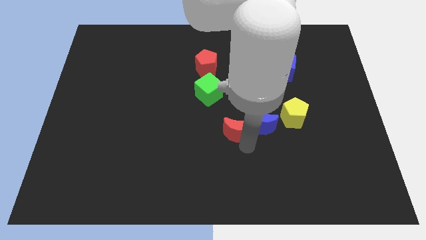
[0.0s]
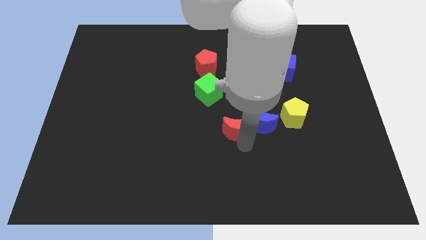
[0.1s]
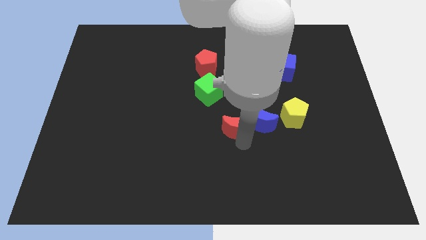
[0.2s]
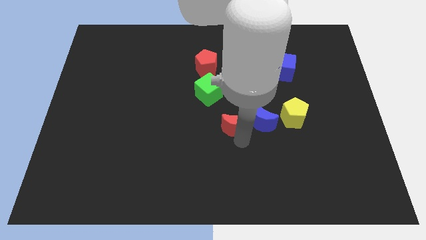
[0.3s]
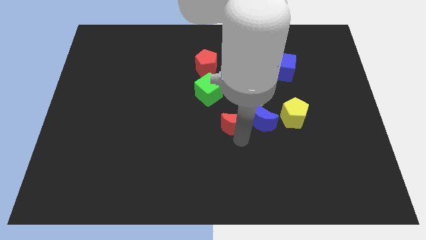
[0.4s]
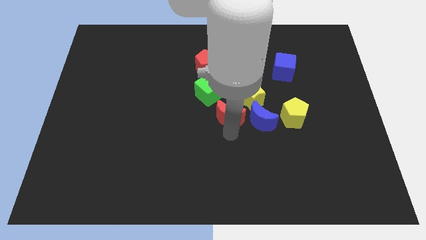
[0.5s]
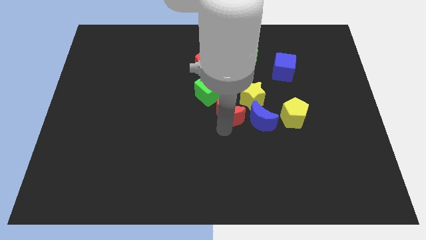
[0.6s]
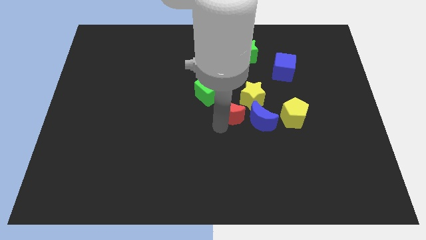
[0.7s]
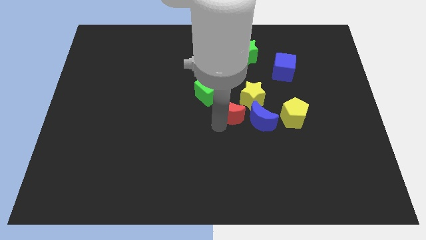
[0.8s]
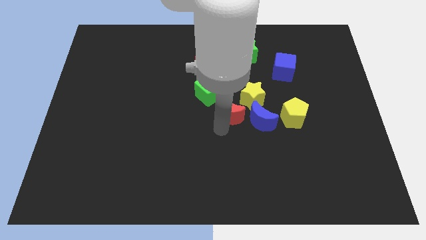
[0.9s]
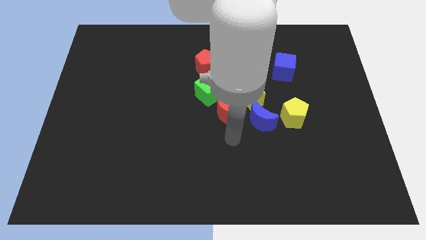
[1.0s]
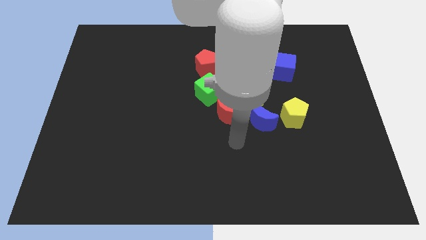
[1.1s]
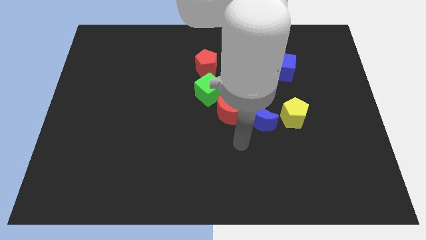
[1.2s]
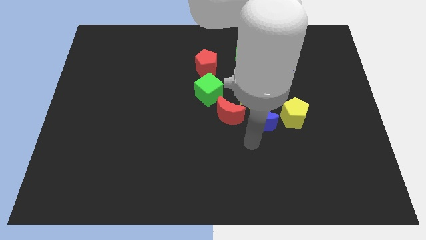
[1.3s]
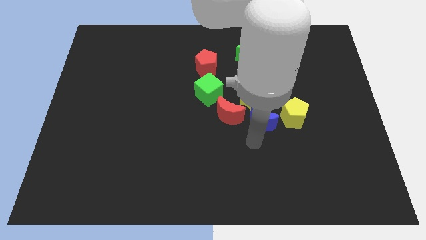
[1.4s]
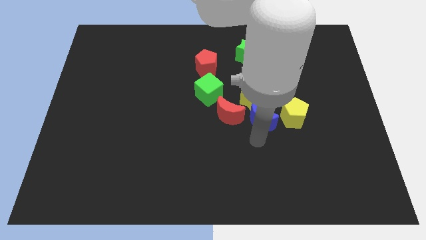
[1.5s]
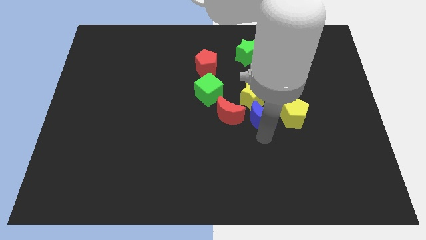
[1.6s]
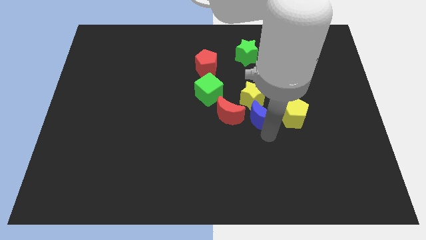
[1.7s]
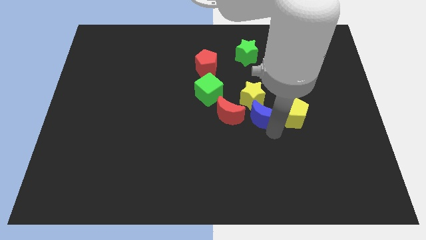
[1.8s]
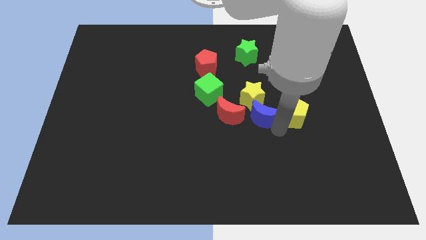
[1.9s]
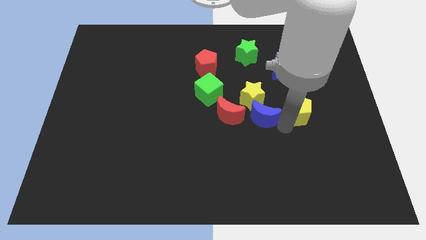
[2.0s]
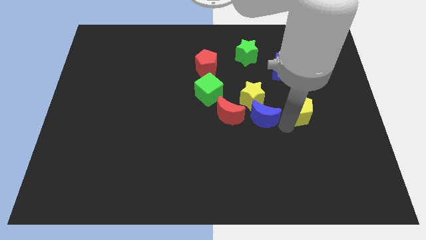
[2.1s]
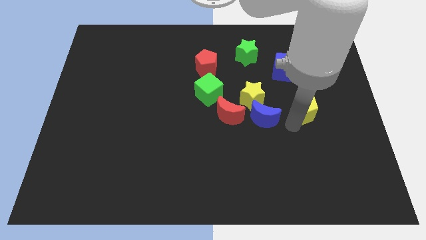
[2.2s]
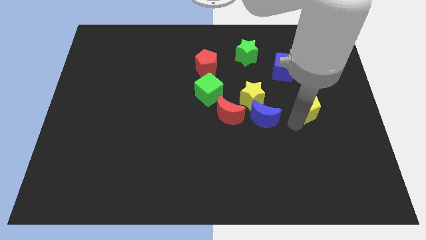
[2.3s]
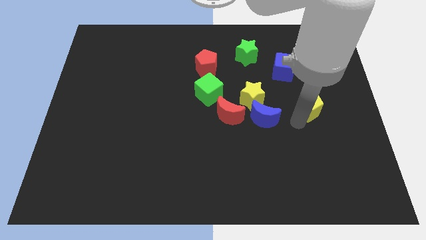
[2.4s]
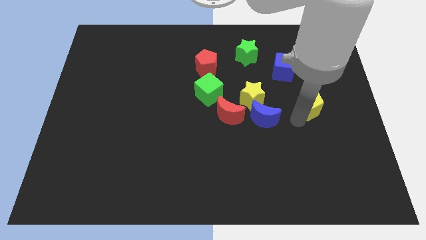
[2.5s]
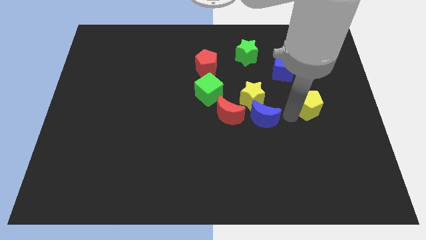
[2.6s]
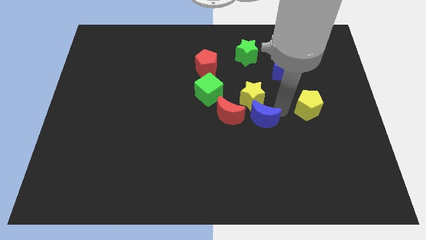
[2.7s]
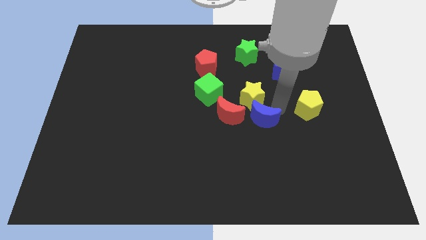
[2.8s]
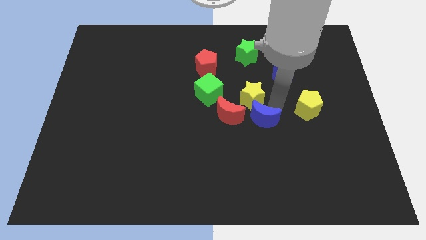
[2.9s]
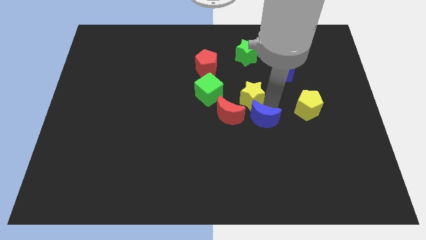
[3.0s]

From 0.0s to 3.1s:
adjust yellow pentagonblue and the red moon to form a horizontal line

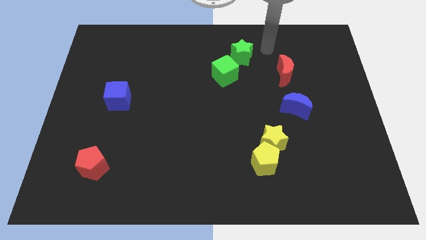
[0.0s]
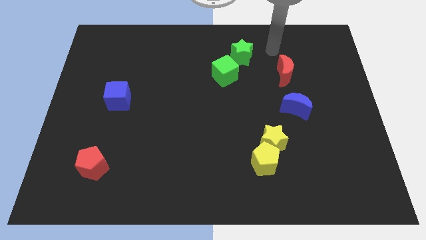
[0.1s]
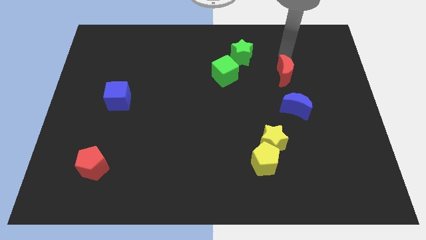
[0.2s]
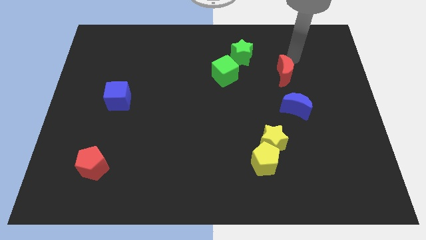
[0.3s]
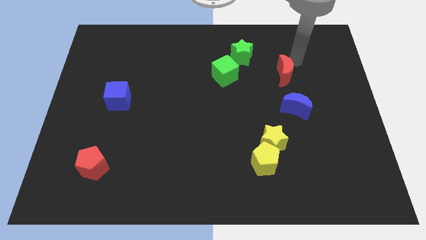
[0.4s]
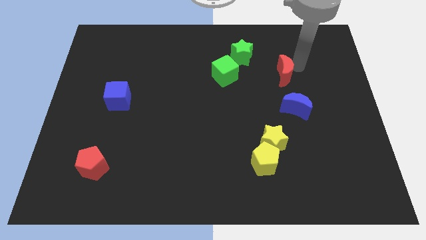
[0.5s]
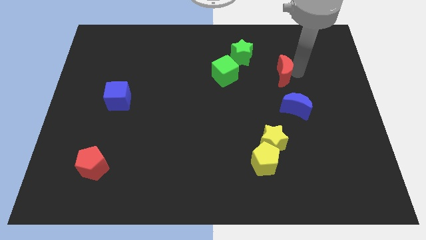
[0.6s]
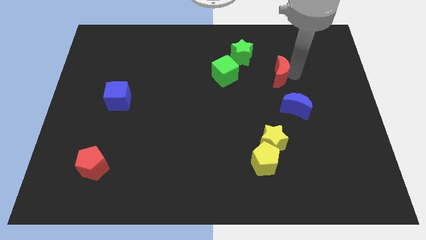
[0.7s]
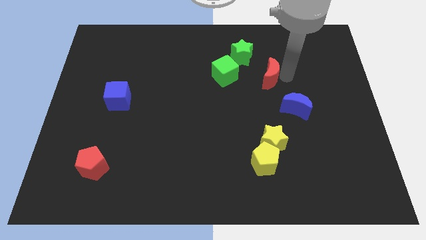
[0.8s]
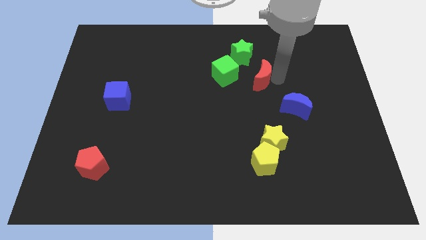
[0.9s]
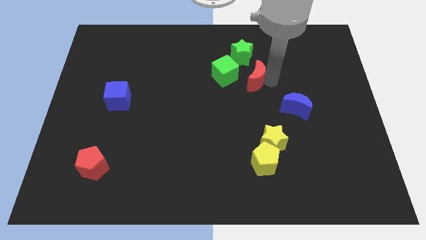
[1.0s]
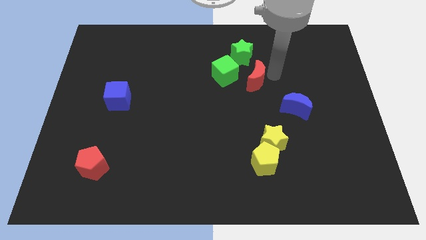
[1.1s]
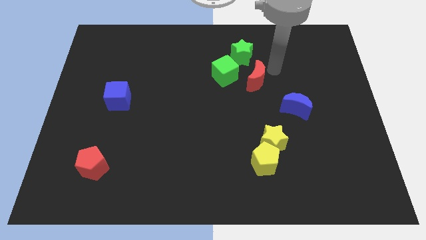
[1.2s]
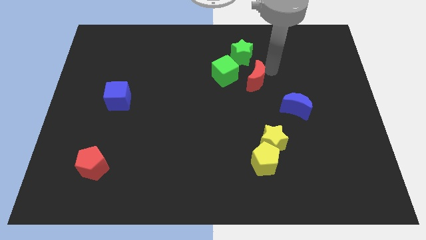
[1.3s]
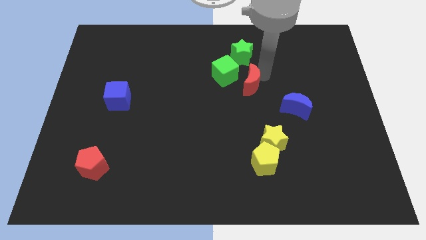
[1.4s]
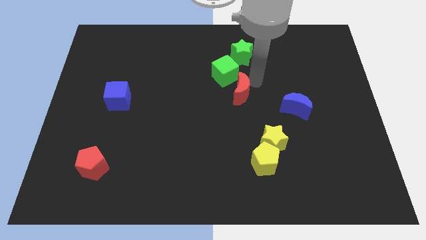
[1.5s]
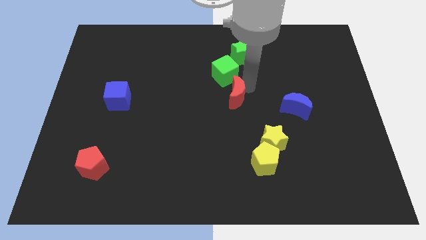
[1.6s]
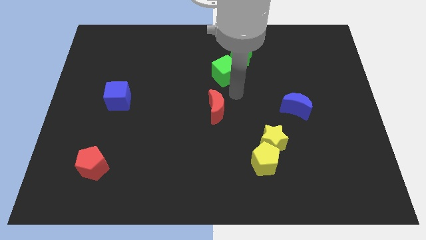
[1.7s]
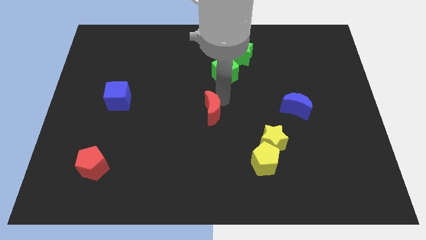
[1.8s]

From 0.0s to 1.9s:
place the red moon vertically below the green cube

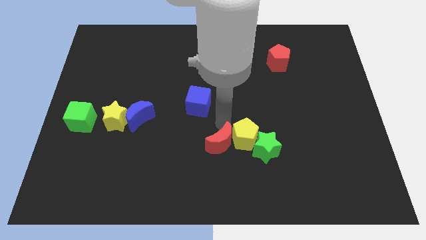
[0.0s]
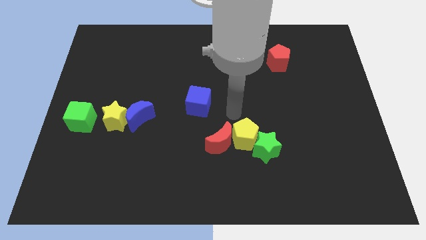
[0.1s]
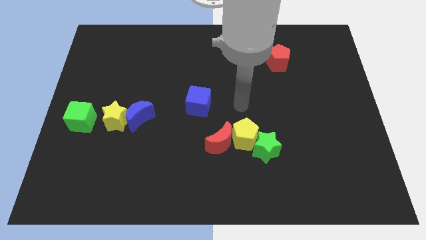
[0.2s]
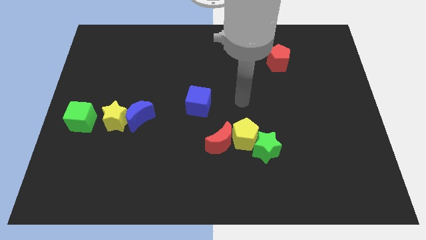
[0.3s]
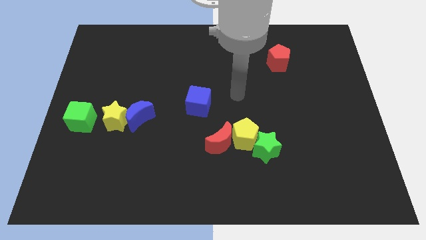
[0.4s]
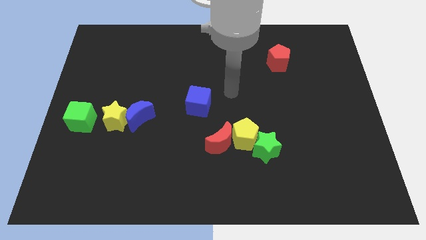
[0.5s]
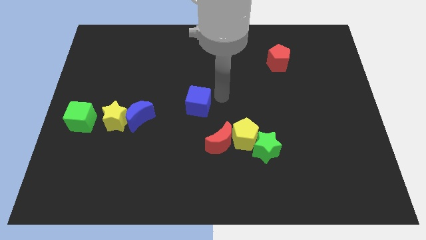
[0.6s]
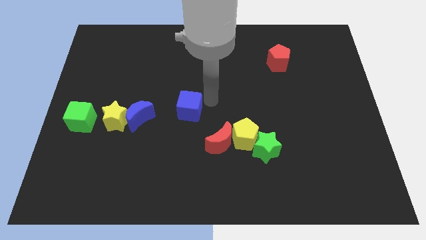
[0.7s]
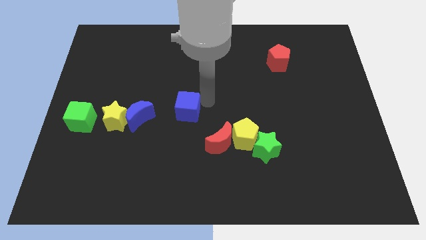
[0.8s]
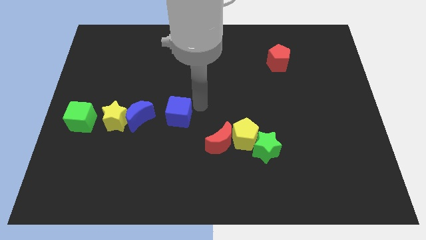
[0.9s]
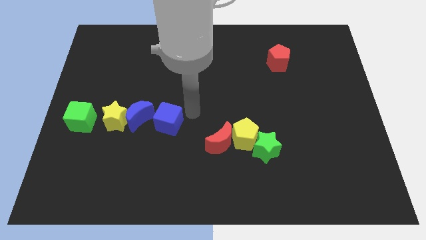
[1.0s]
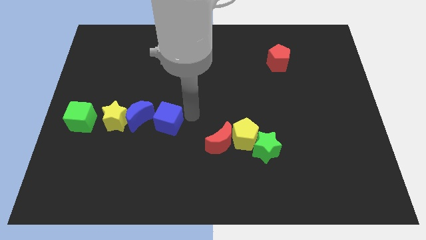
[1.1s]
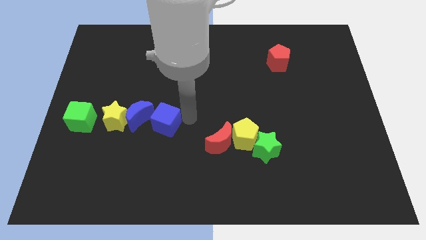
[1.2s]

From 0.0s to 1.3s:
push blue cube to the right side of the blue crescent

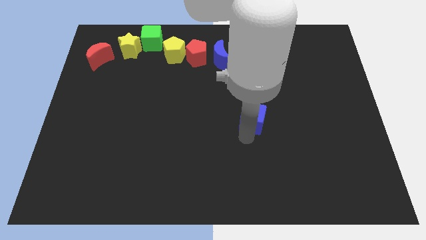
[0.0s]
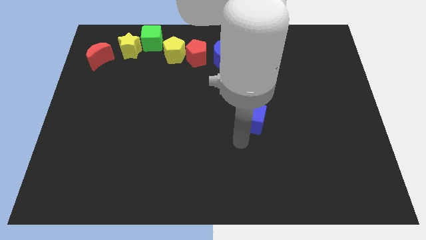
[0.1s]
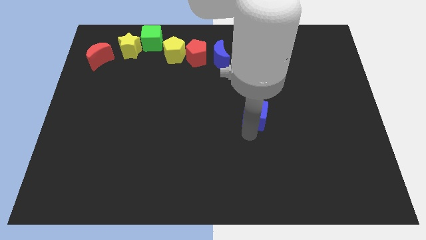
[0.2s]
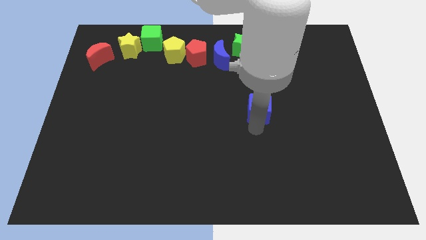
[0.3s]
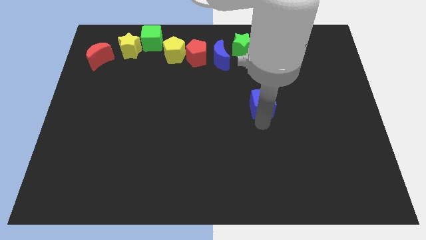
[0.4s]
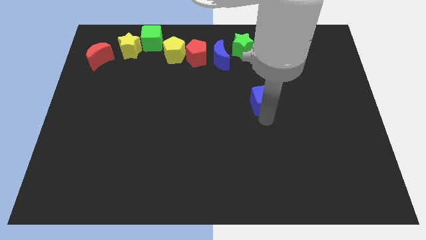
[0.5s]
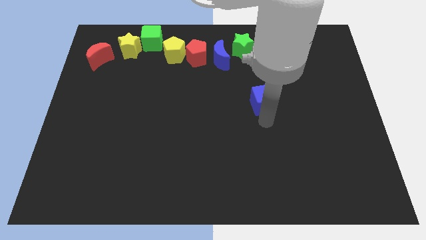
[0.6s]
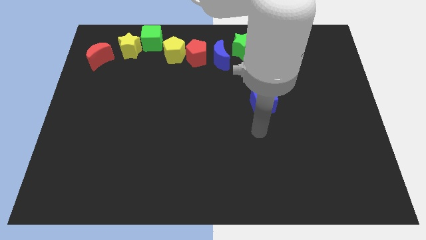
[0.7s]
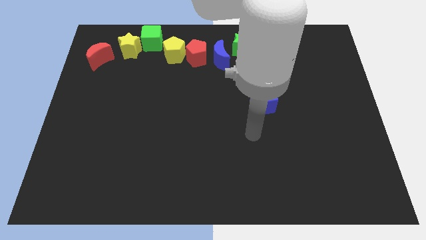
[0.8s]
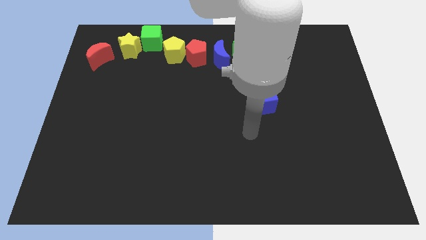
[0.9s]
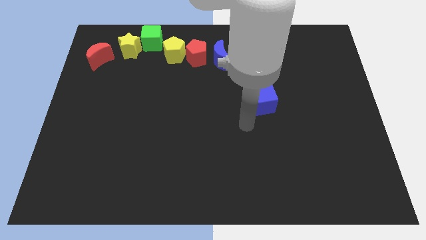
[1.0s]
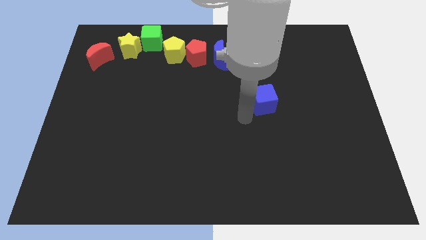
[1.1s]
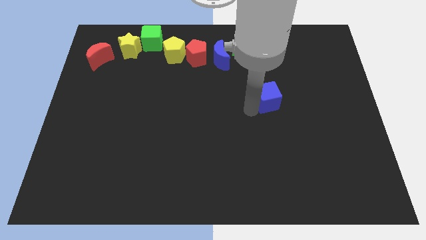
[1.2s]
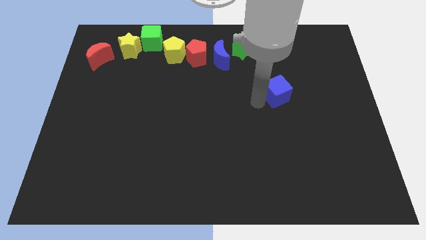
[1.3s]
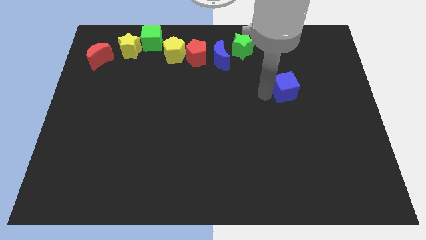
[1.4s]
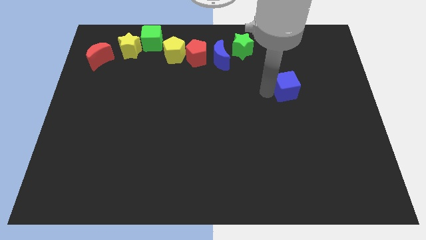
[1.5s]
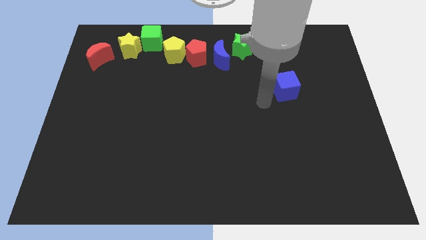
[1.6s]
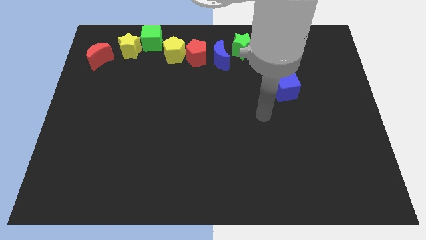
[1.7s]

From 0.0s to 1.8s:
slightly push the blue cube top right

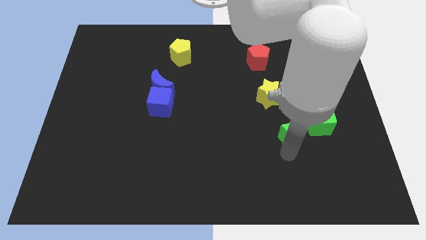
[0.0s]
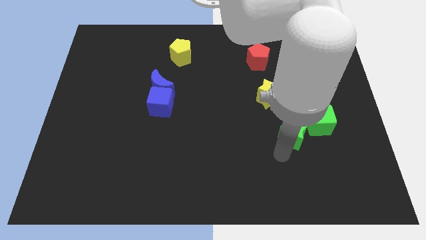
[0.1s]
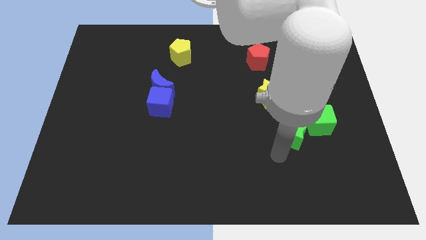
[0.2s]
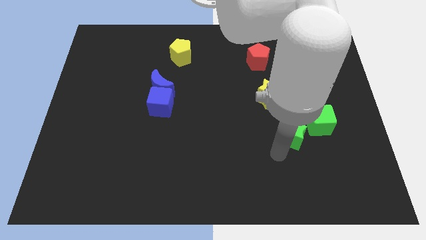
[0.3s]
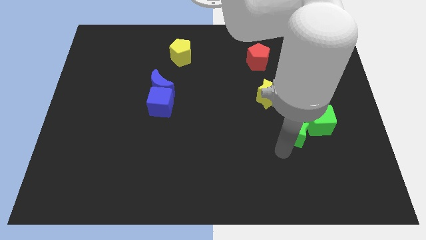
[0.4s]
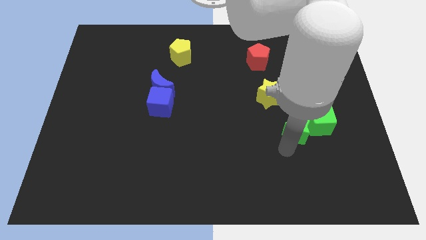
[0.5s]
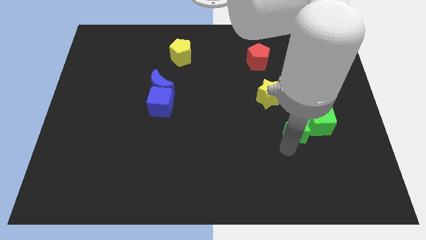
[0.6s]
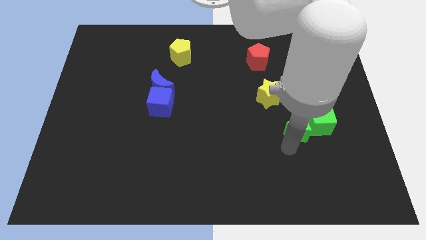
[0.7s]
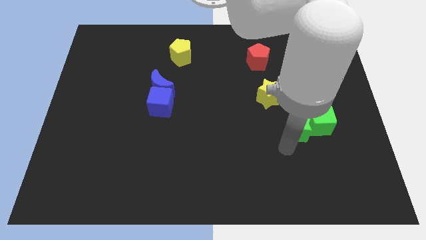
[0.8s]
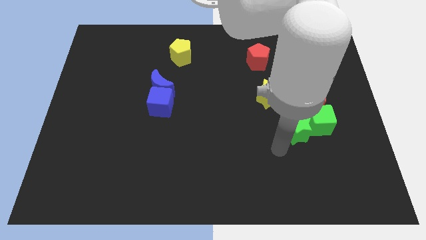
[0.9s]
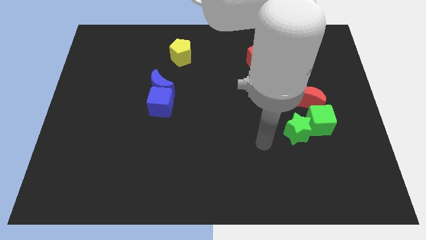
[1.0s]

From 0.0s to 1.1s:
place the green star beside the green cube
